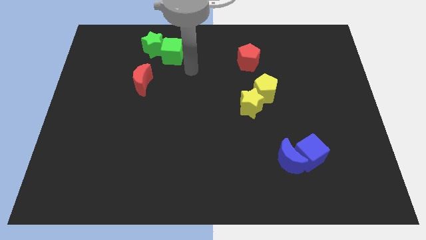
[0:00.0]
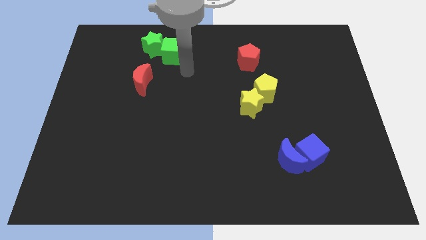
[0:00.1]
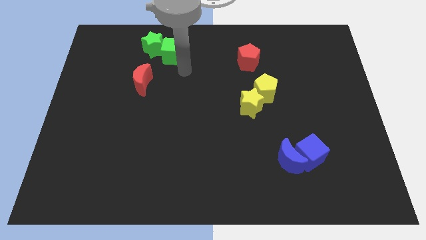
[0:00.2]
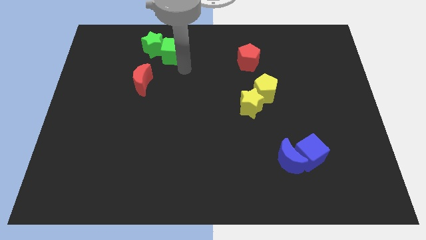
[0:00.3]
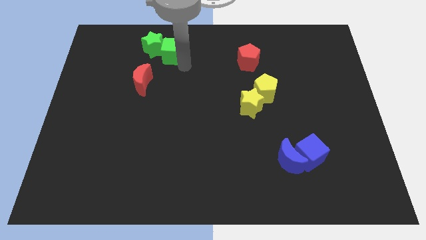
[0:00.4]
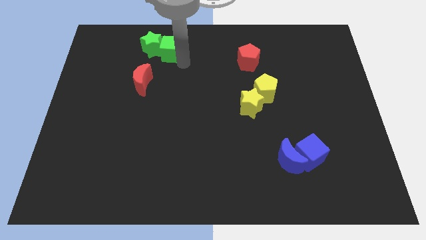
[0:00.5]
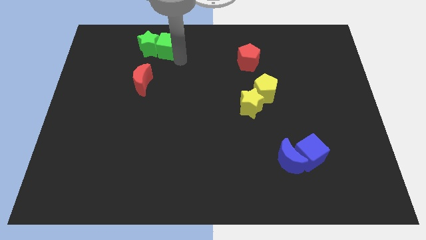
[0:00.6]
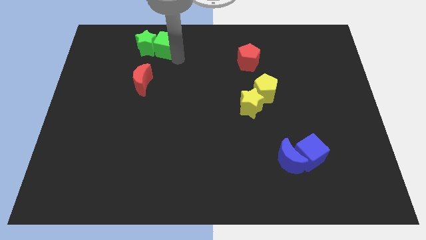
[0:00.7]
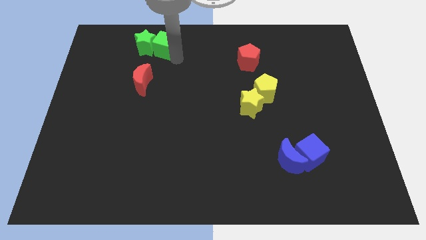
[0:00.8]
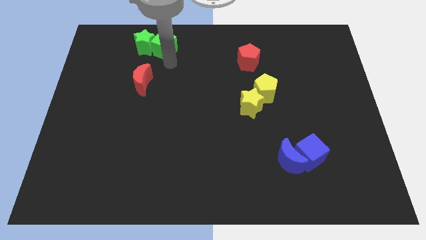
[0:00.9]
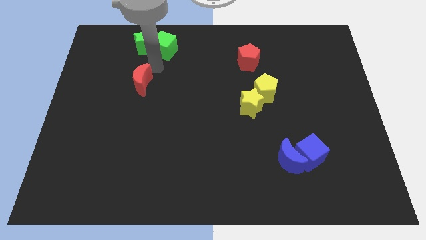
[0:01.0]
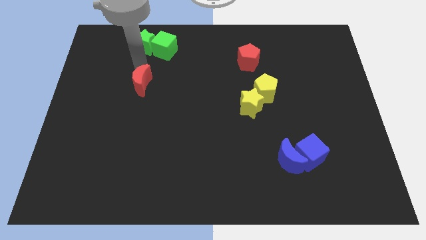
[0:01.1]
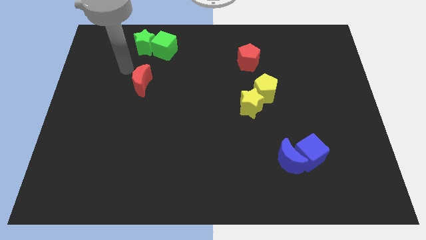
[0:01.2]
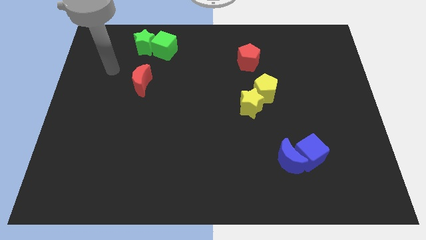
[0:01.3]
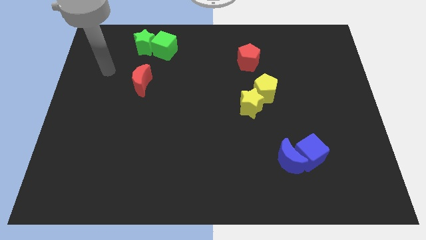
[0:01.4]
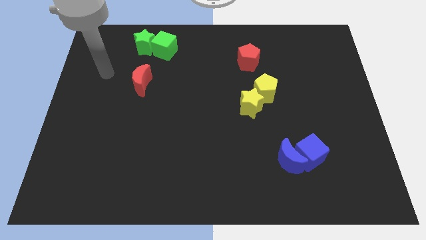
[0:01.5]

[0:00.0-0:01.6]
push the green cube diagonally to the top right of the red moon

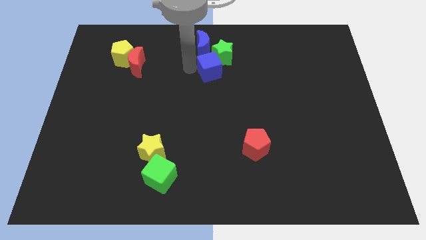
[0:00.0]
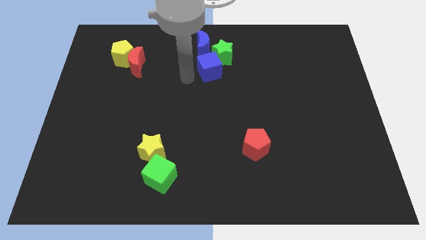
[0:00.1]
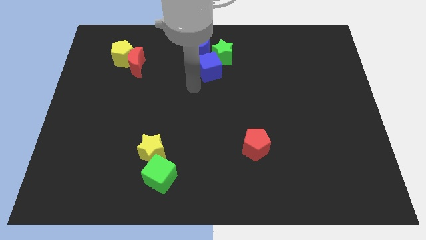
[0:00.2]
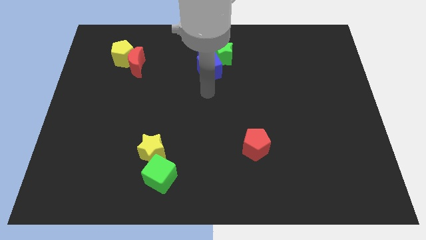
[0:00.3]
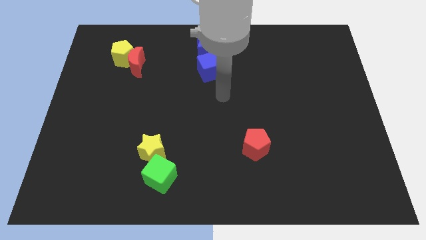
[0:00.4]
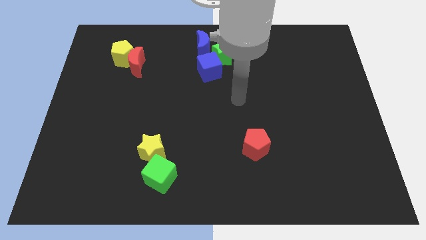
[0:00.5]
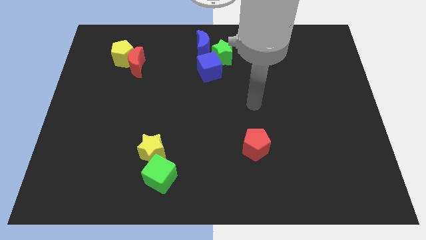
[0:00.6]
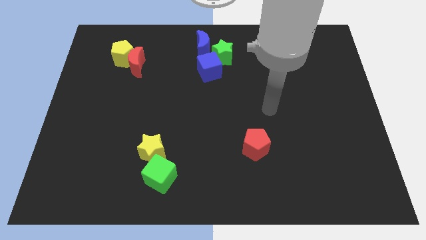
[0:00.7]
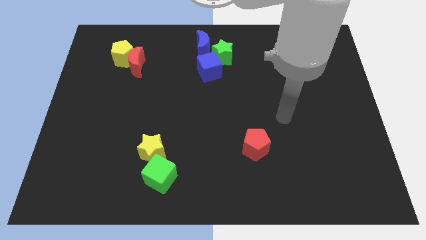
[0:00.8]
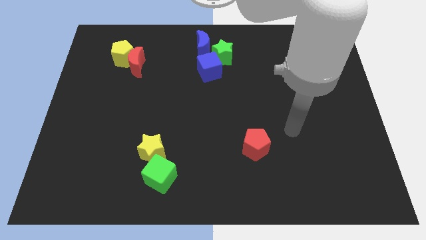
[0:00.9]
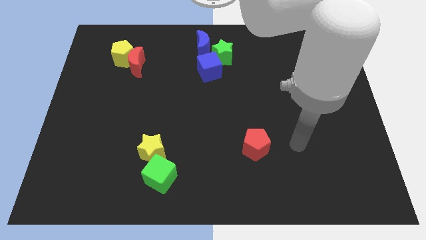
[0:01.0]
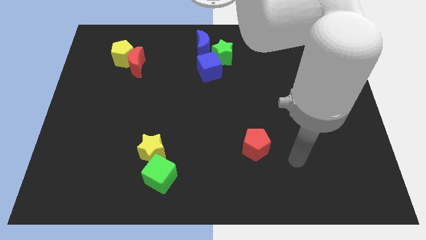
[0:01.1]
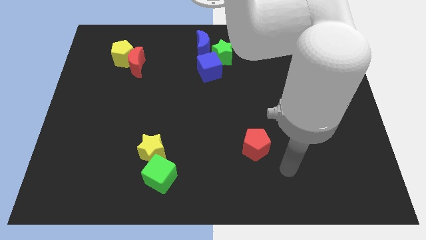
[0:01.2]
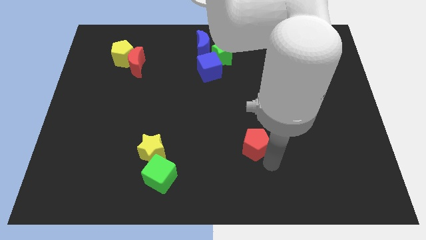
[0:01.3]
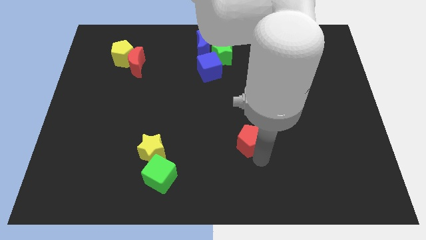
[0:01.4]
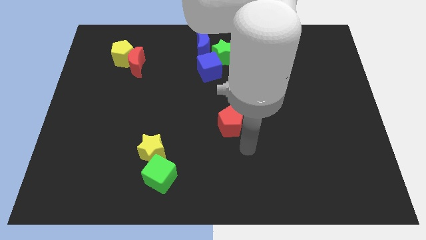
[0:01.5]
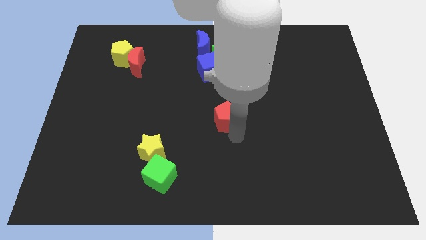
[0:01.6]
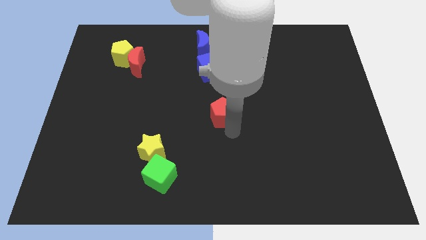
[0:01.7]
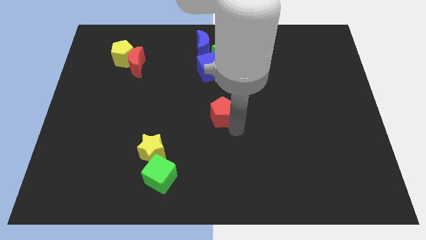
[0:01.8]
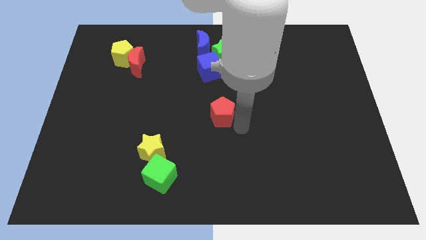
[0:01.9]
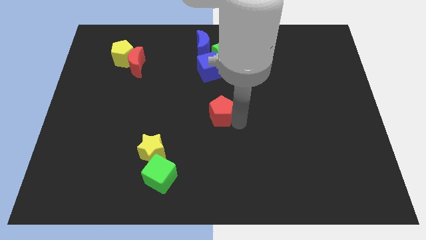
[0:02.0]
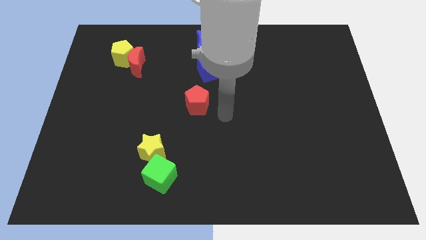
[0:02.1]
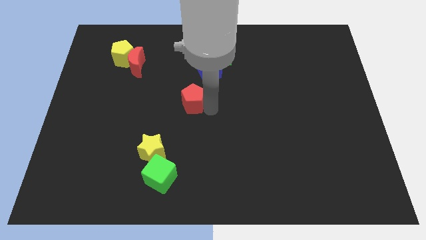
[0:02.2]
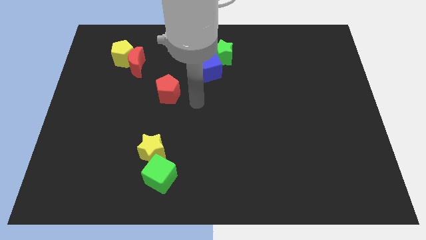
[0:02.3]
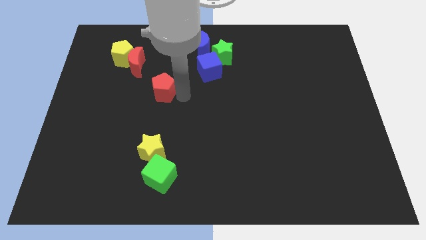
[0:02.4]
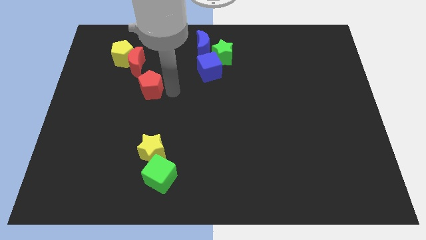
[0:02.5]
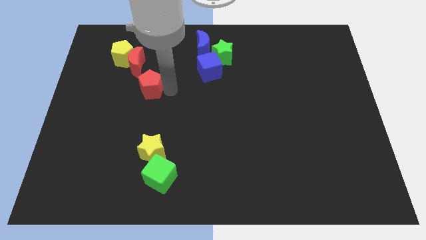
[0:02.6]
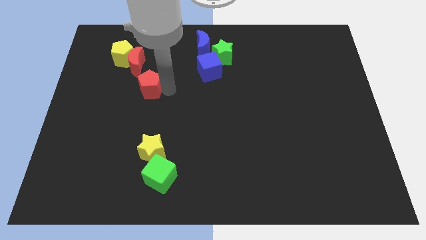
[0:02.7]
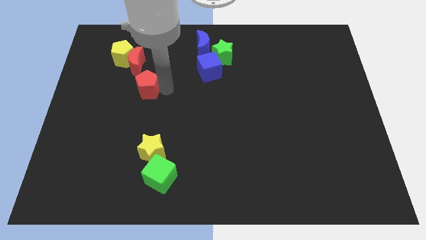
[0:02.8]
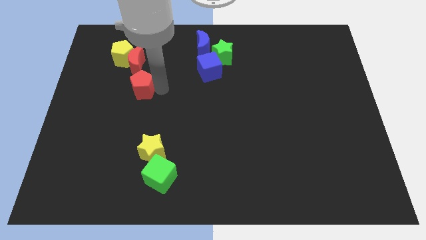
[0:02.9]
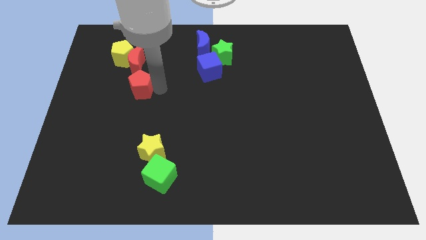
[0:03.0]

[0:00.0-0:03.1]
move the red pentagon to the bottom of the red crescent

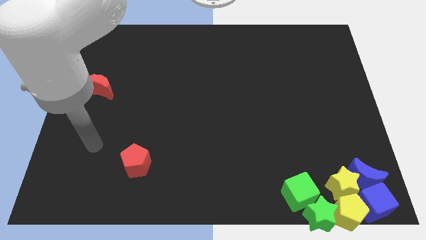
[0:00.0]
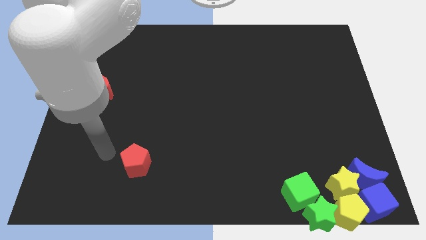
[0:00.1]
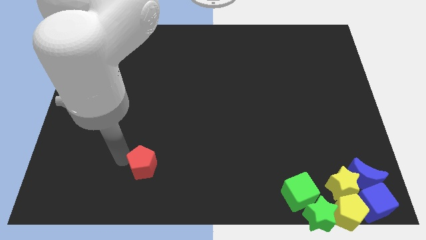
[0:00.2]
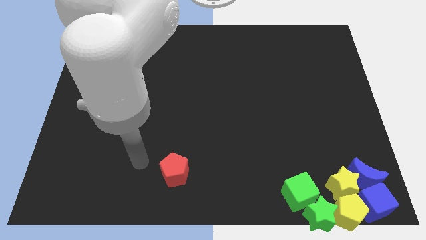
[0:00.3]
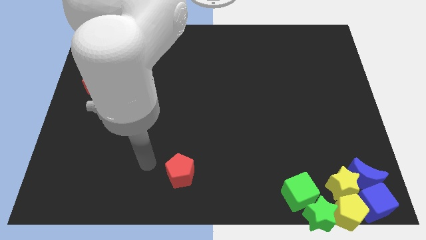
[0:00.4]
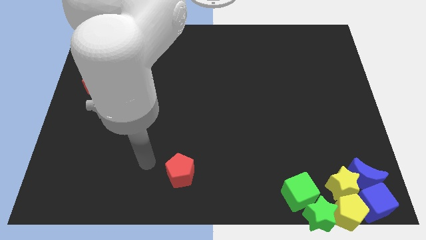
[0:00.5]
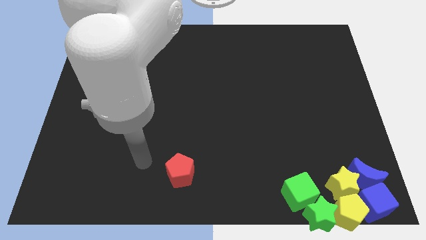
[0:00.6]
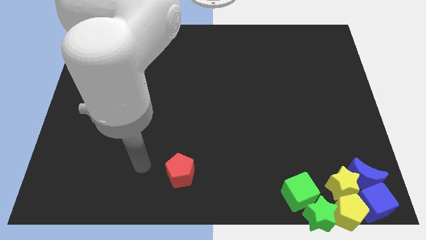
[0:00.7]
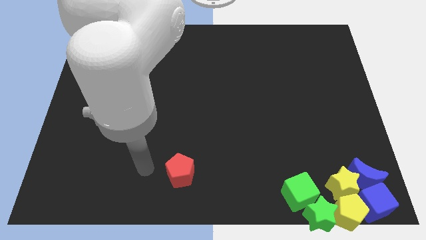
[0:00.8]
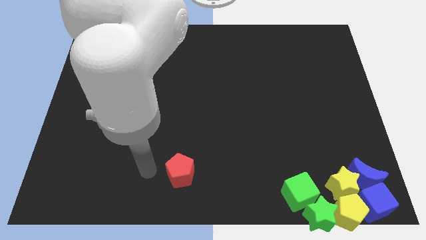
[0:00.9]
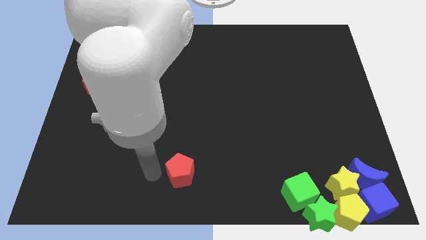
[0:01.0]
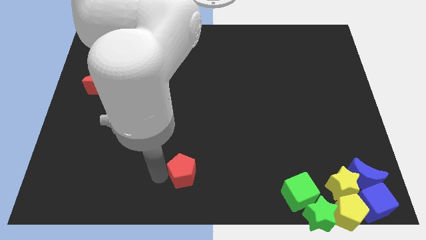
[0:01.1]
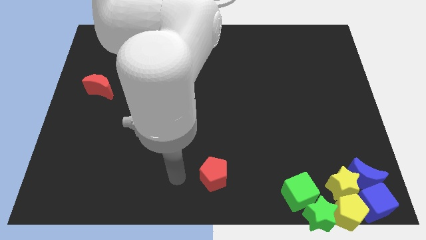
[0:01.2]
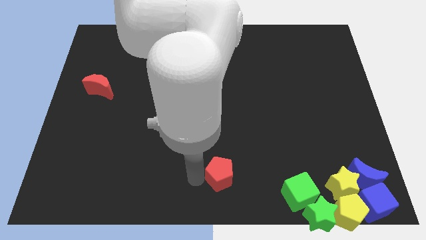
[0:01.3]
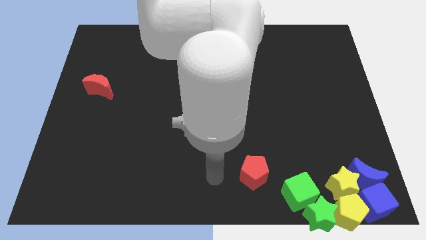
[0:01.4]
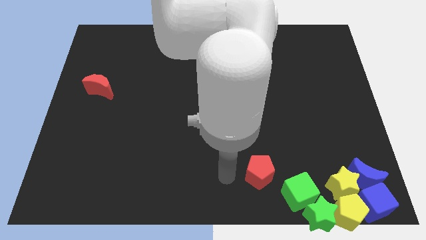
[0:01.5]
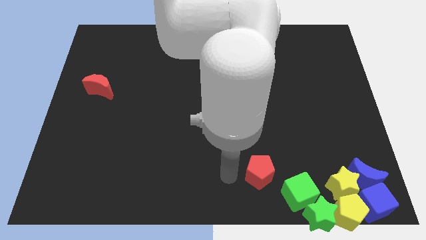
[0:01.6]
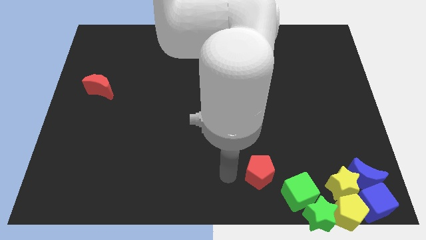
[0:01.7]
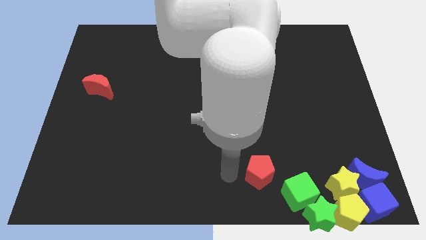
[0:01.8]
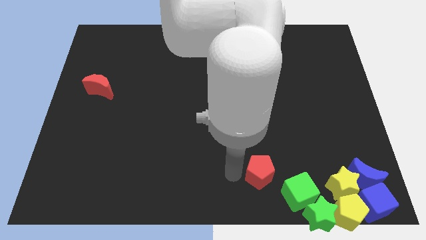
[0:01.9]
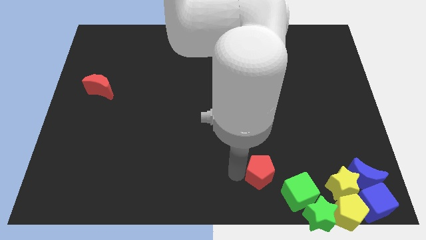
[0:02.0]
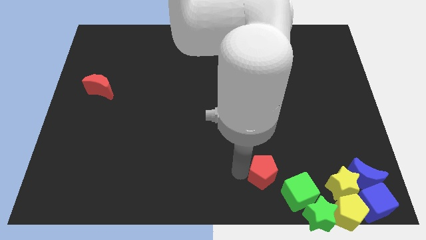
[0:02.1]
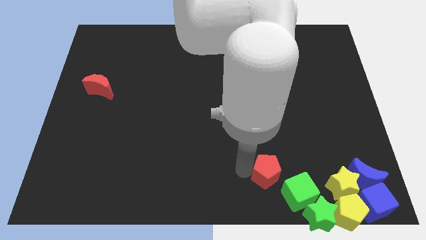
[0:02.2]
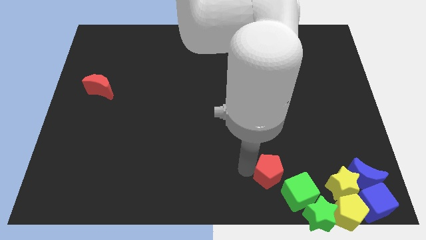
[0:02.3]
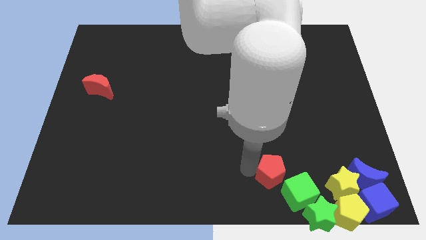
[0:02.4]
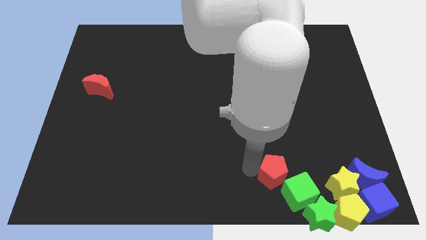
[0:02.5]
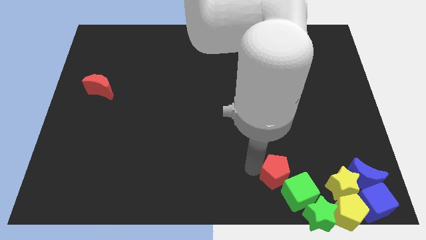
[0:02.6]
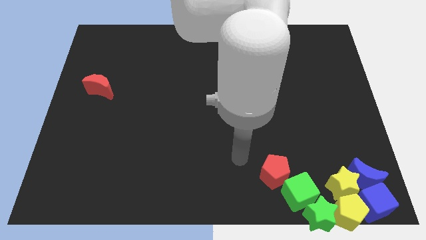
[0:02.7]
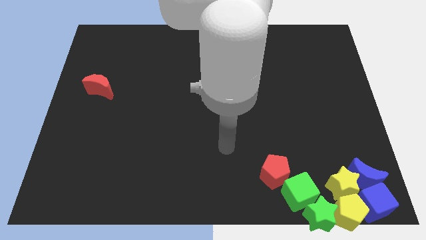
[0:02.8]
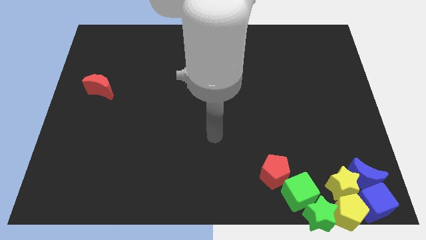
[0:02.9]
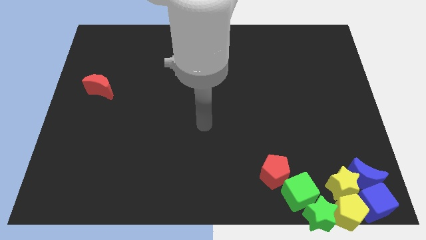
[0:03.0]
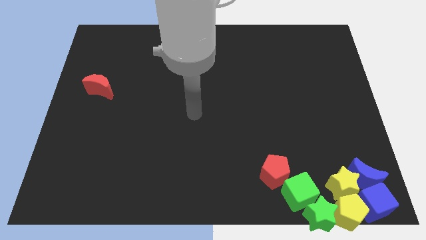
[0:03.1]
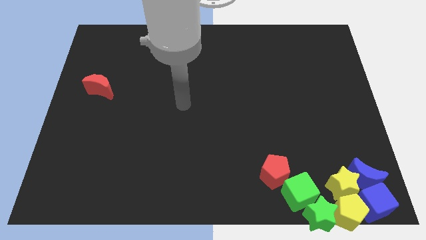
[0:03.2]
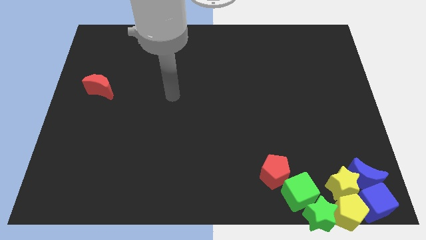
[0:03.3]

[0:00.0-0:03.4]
slide the red pentagon towards the green cube

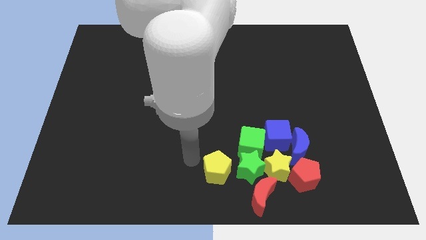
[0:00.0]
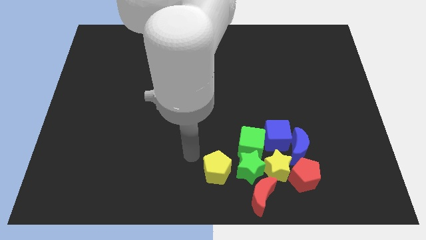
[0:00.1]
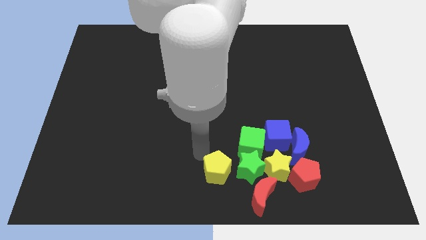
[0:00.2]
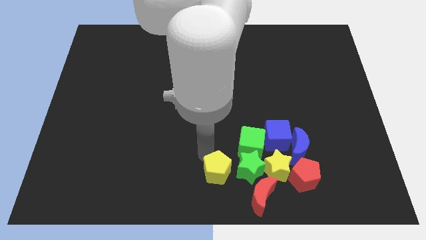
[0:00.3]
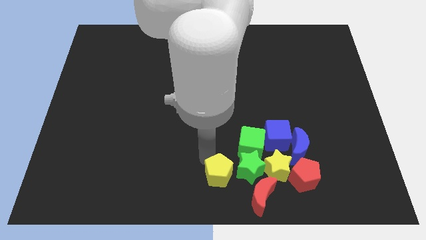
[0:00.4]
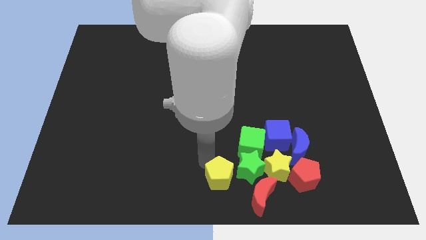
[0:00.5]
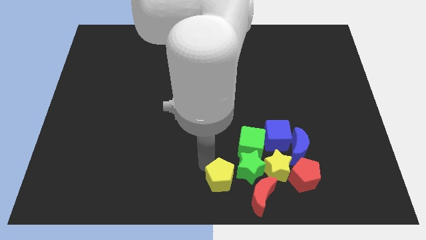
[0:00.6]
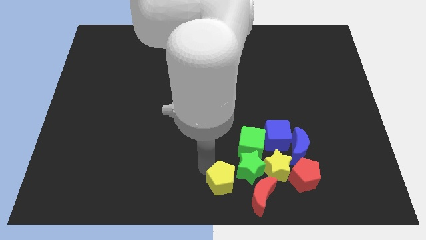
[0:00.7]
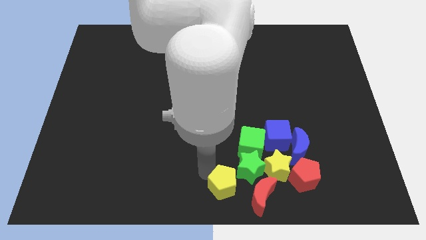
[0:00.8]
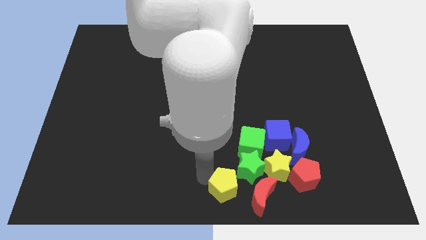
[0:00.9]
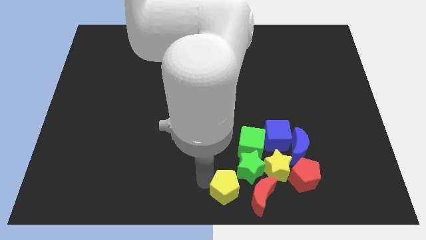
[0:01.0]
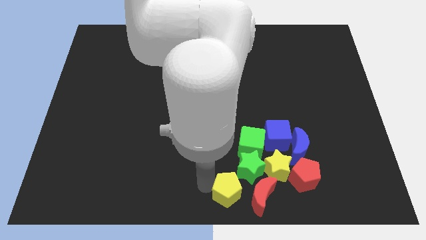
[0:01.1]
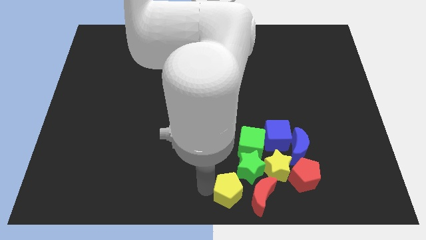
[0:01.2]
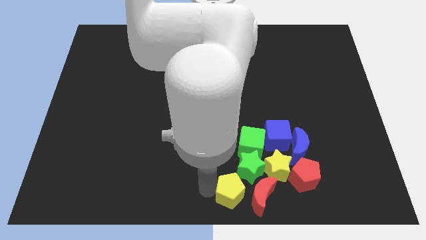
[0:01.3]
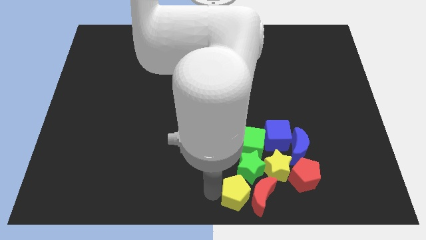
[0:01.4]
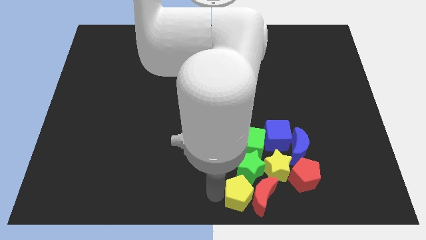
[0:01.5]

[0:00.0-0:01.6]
push the yellow pentagon bottom side of the green star
